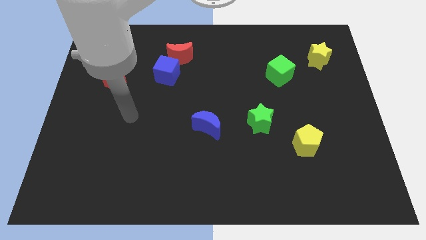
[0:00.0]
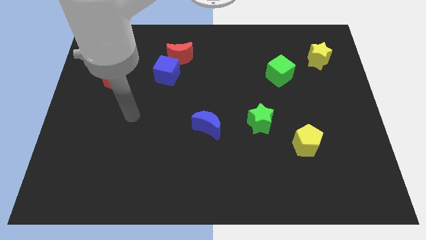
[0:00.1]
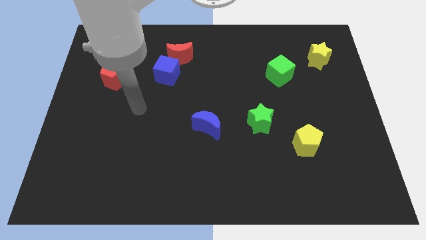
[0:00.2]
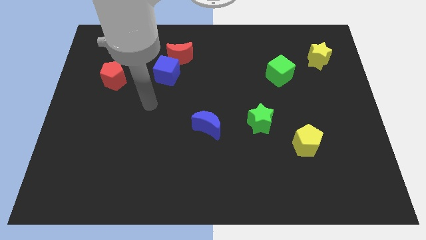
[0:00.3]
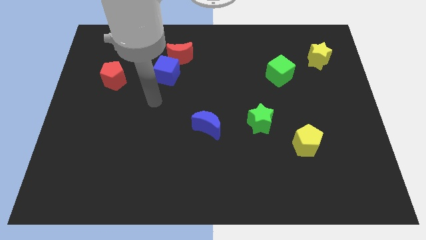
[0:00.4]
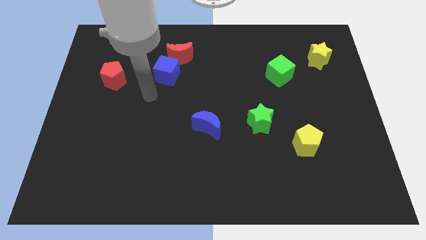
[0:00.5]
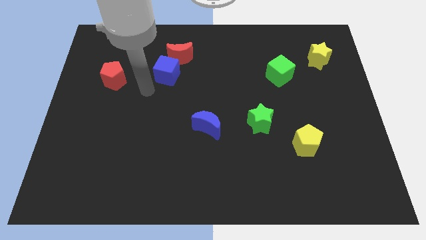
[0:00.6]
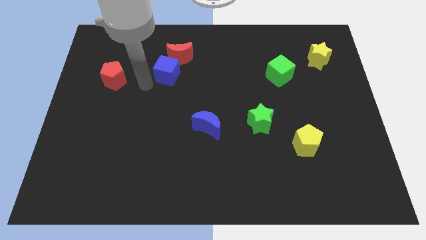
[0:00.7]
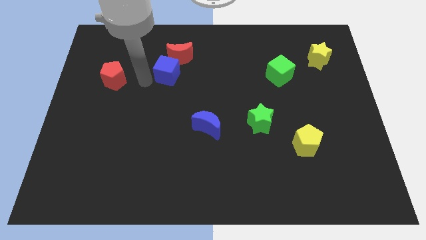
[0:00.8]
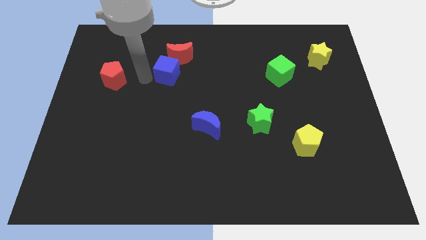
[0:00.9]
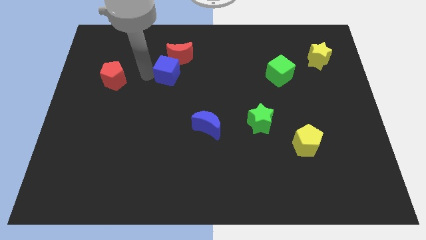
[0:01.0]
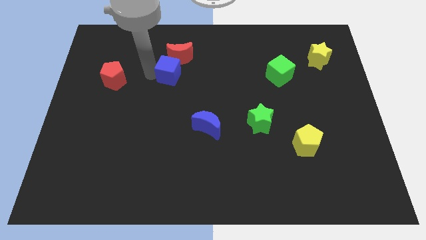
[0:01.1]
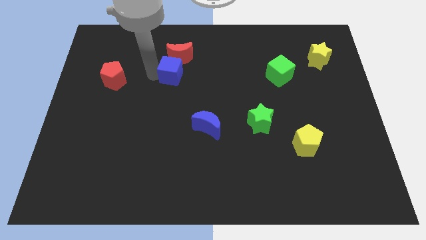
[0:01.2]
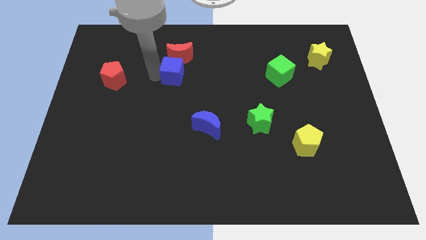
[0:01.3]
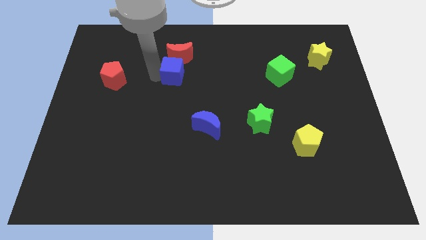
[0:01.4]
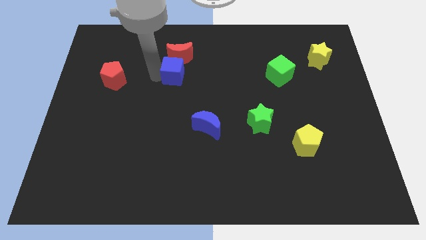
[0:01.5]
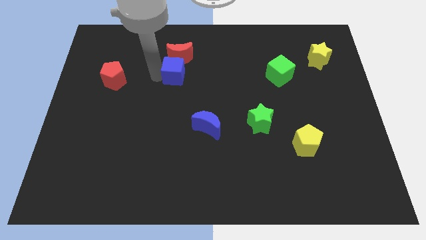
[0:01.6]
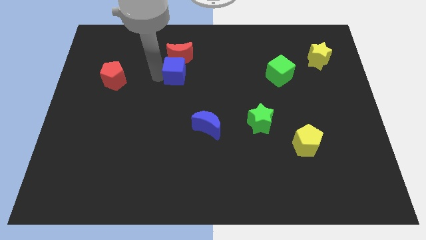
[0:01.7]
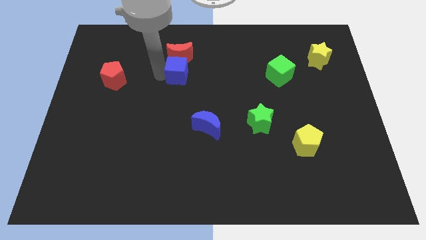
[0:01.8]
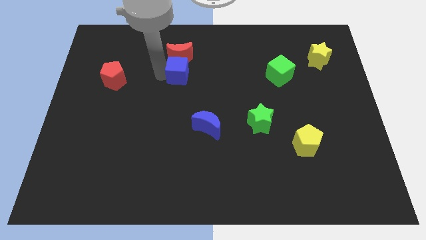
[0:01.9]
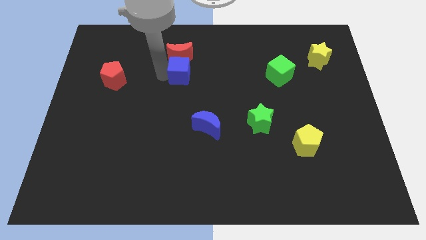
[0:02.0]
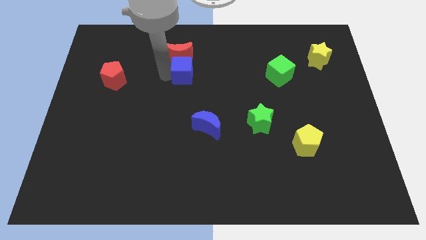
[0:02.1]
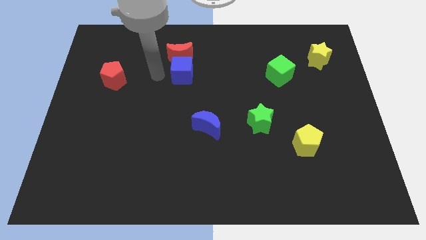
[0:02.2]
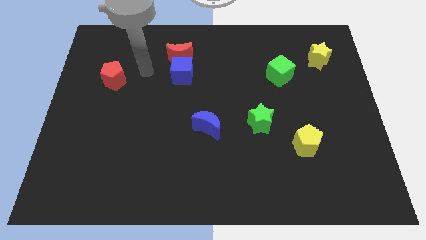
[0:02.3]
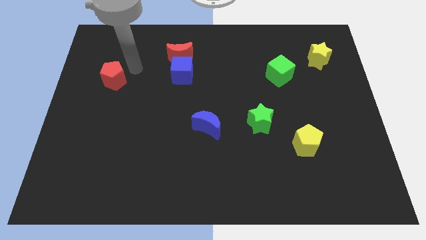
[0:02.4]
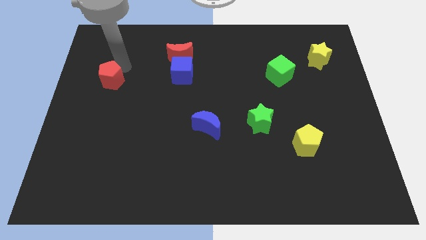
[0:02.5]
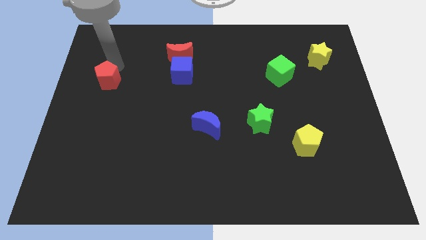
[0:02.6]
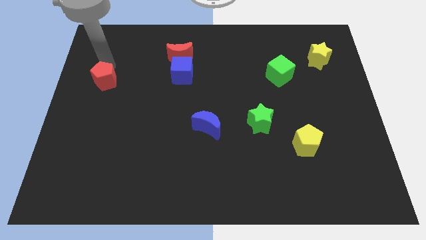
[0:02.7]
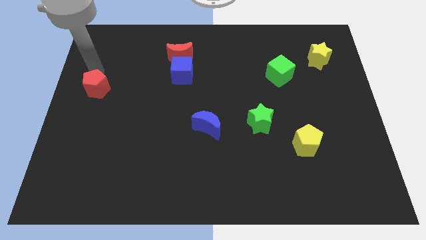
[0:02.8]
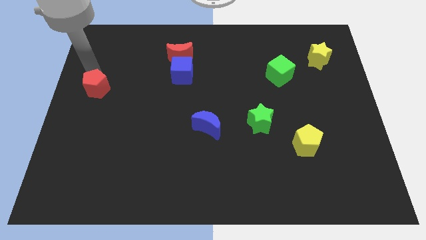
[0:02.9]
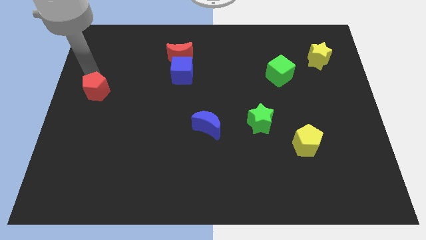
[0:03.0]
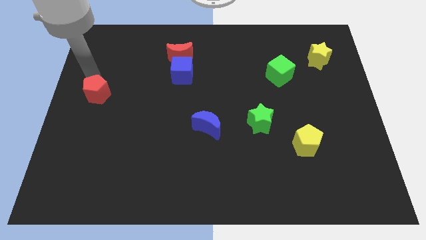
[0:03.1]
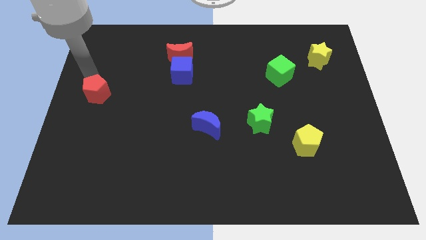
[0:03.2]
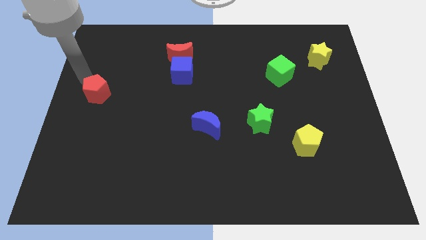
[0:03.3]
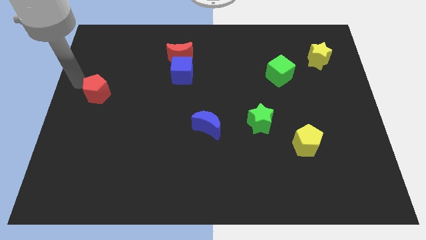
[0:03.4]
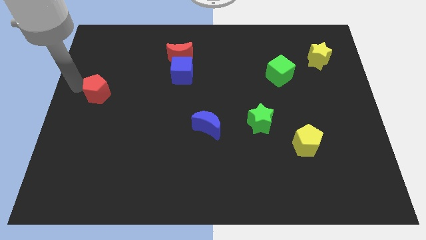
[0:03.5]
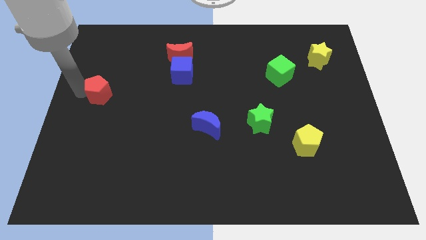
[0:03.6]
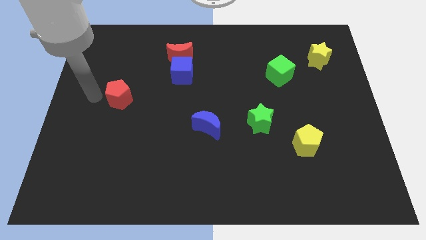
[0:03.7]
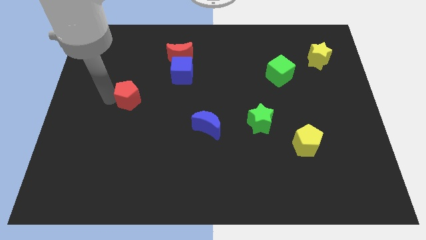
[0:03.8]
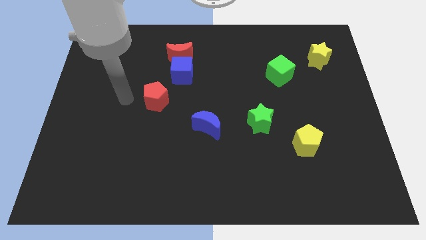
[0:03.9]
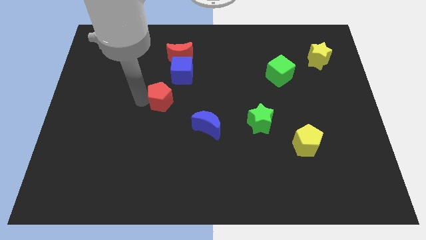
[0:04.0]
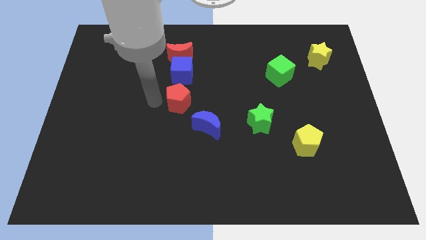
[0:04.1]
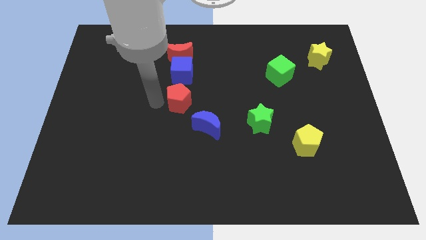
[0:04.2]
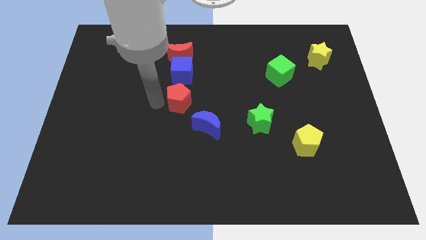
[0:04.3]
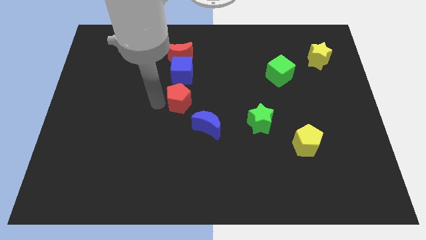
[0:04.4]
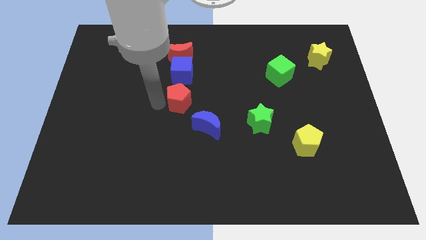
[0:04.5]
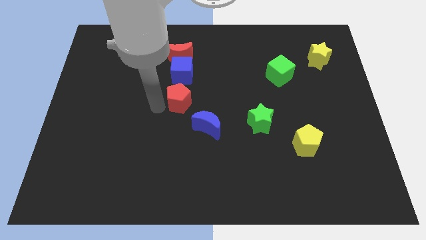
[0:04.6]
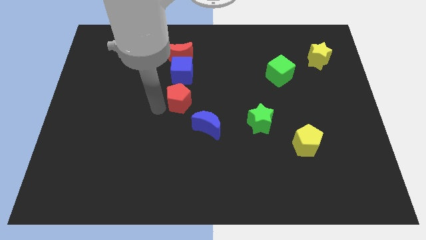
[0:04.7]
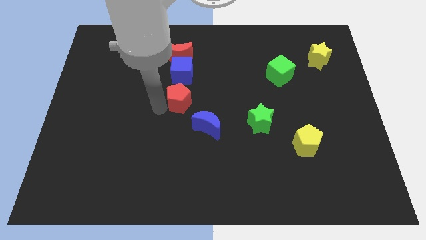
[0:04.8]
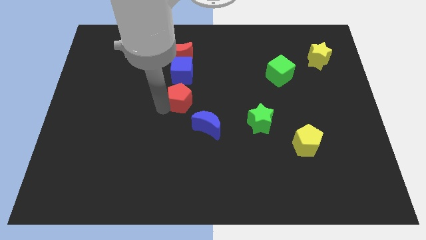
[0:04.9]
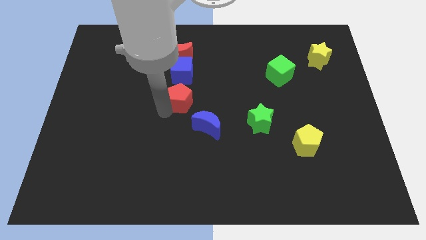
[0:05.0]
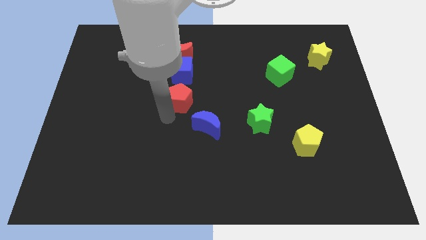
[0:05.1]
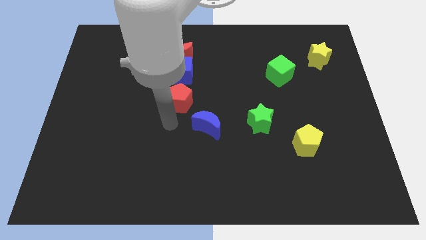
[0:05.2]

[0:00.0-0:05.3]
push the red pentagon to the bottom of the blue cube

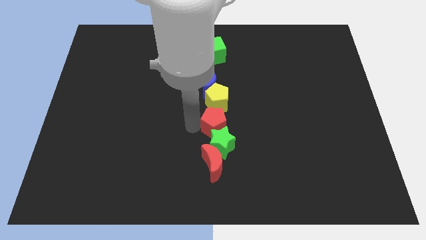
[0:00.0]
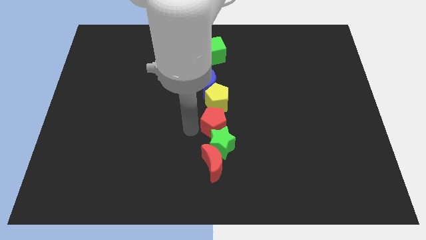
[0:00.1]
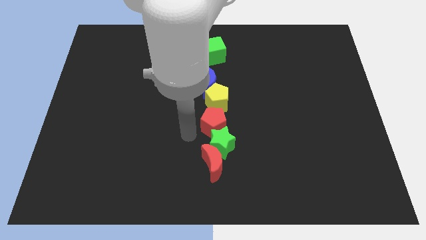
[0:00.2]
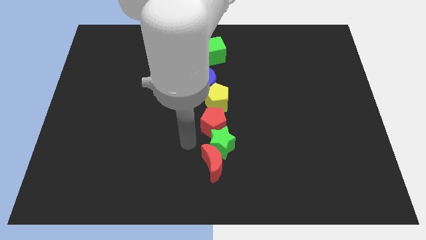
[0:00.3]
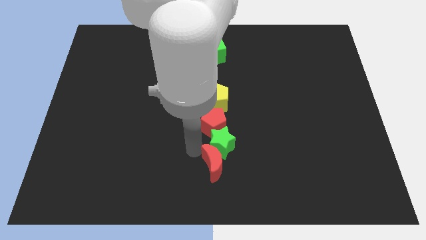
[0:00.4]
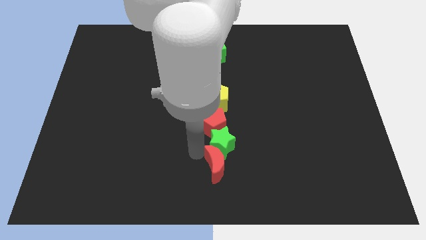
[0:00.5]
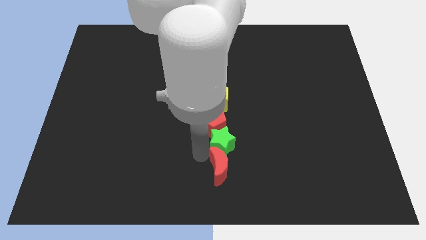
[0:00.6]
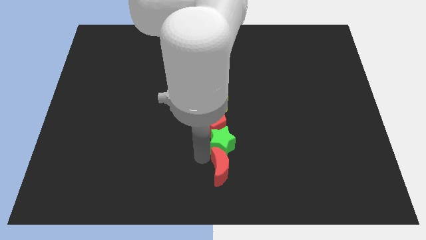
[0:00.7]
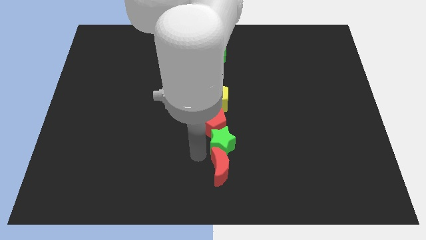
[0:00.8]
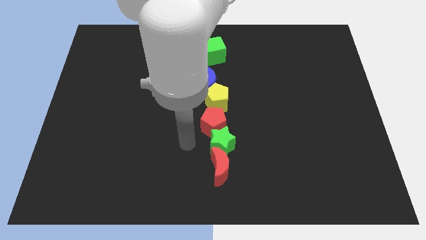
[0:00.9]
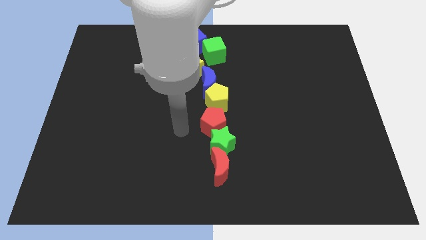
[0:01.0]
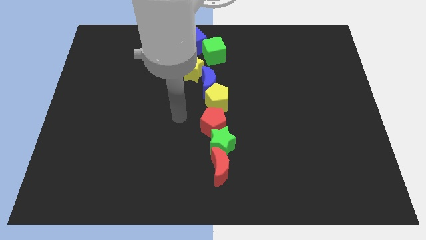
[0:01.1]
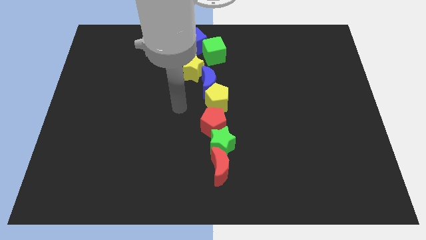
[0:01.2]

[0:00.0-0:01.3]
push the red crescent slightly to the right

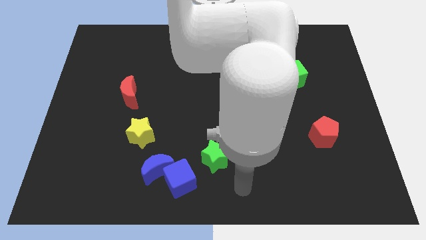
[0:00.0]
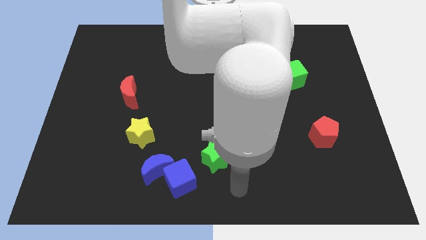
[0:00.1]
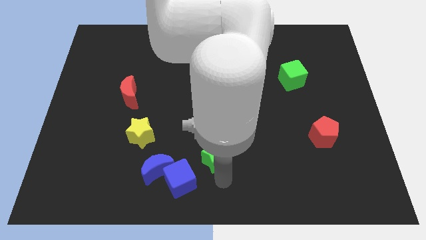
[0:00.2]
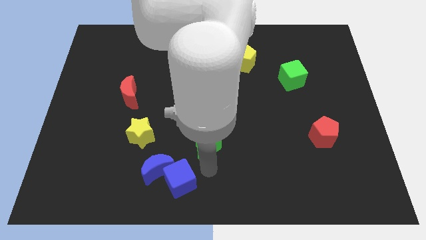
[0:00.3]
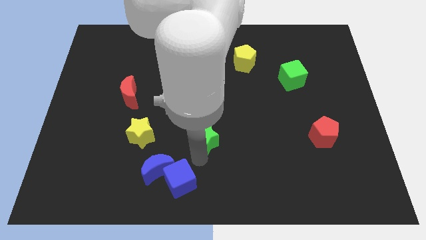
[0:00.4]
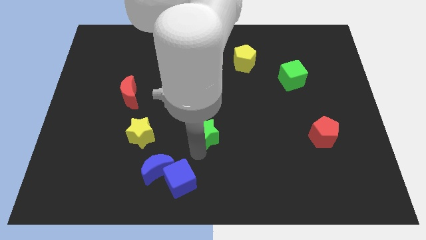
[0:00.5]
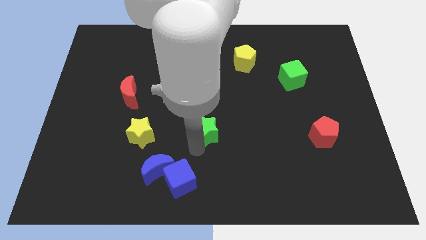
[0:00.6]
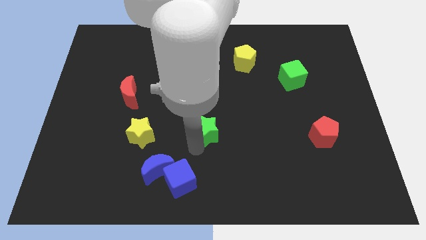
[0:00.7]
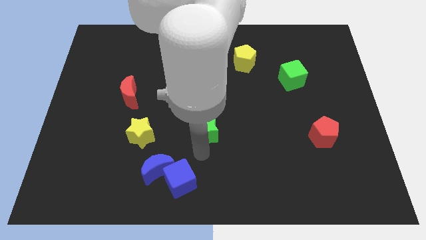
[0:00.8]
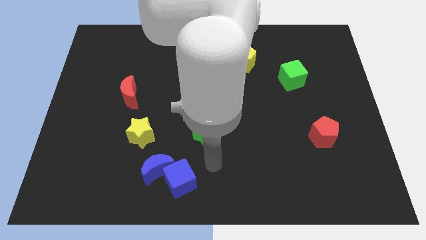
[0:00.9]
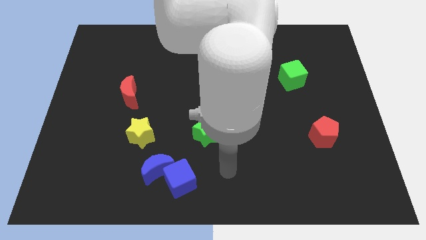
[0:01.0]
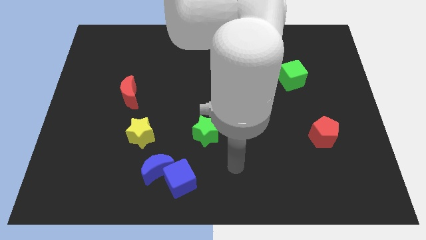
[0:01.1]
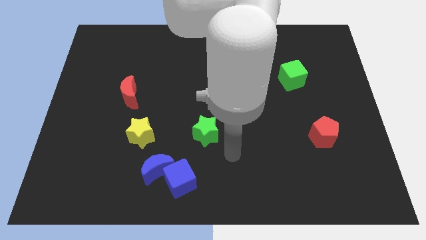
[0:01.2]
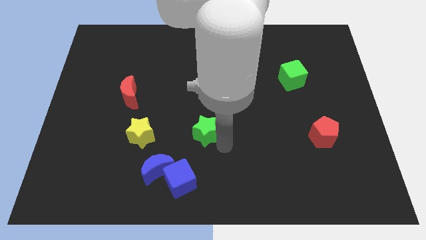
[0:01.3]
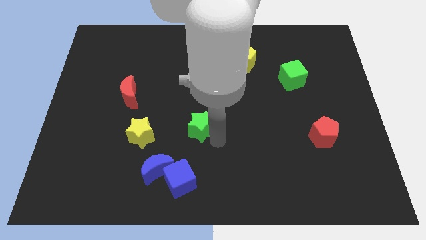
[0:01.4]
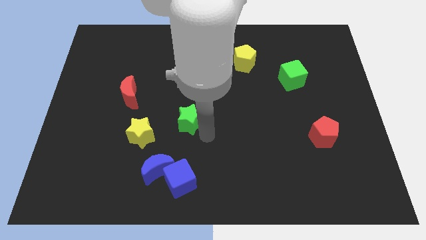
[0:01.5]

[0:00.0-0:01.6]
place the green star parallel to yellow star

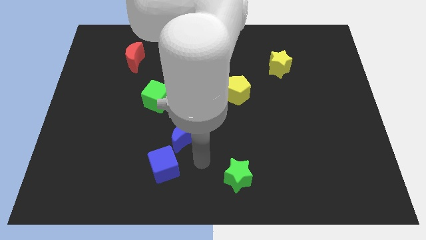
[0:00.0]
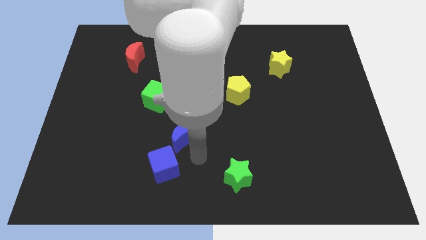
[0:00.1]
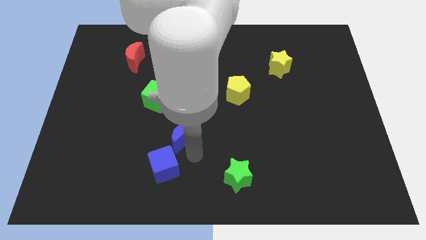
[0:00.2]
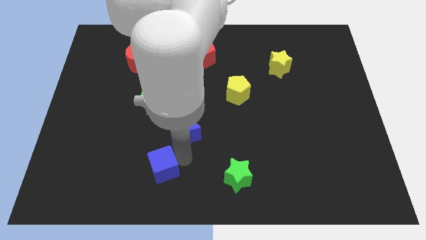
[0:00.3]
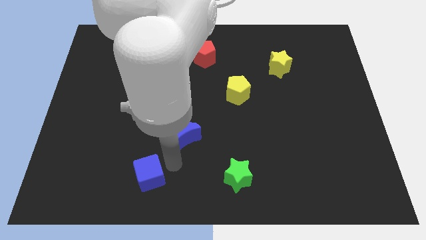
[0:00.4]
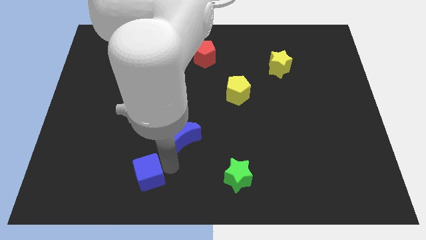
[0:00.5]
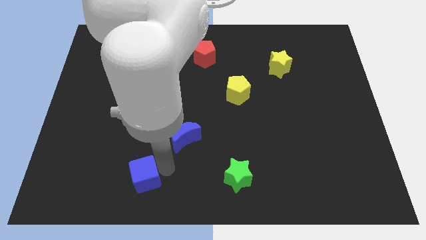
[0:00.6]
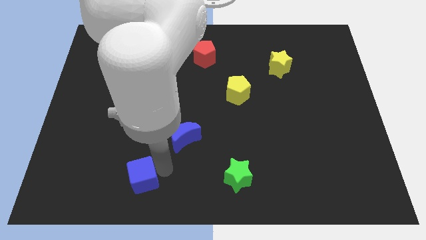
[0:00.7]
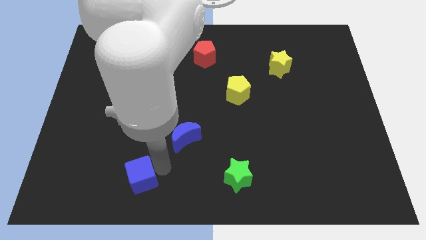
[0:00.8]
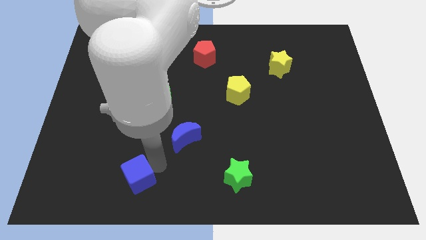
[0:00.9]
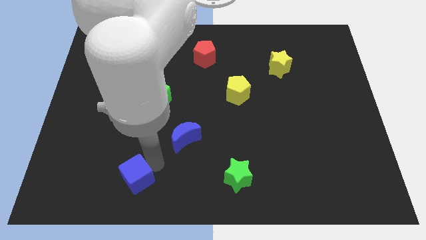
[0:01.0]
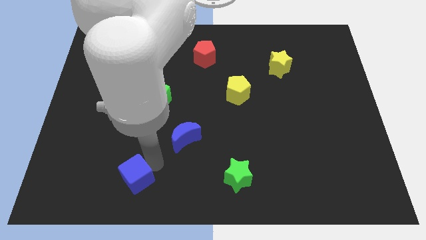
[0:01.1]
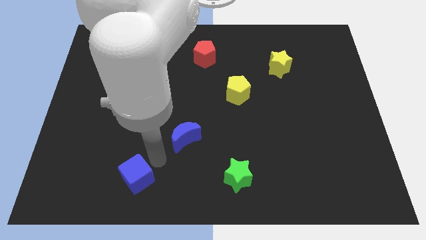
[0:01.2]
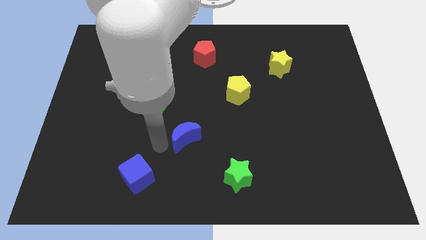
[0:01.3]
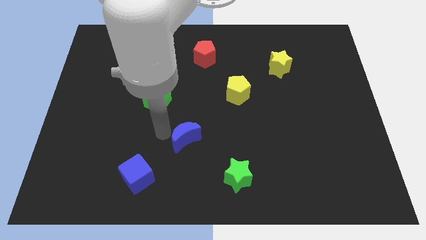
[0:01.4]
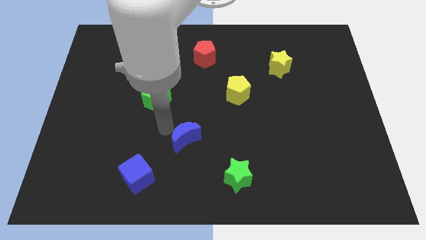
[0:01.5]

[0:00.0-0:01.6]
move the blue cube away from the blue crescent
